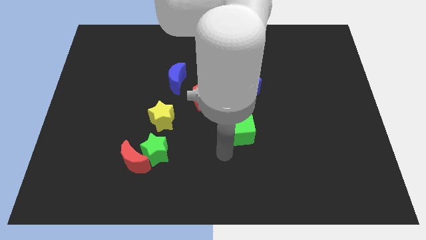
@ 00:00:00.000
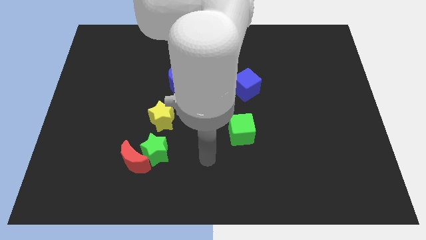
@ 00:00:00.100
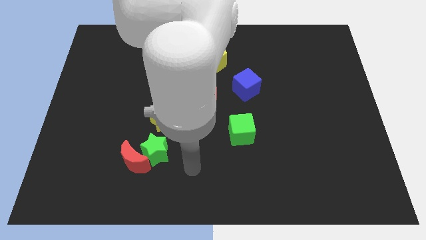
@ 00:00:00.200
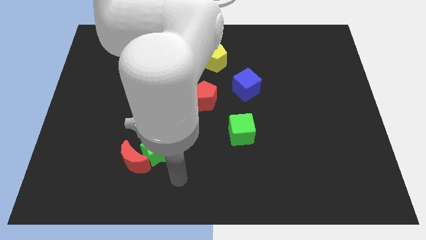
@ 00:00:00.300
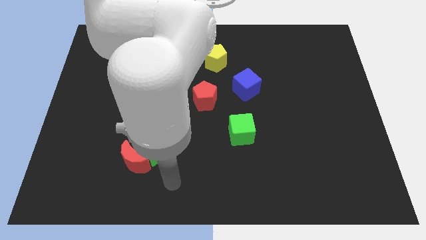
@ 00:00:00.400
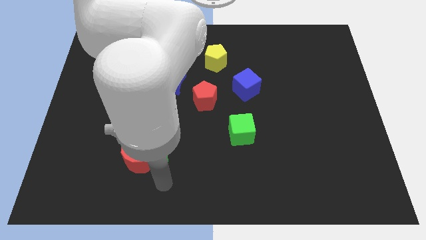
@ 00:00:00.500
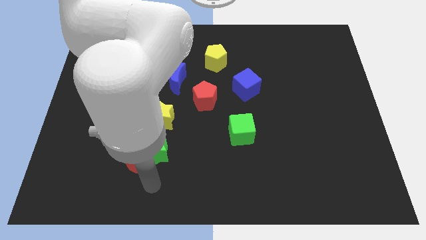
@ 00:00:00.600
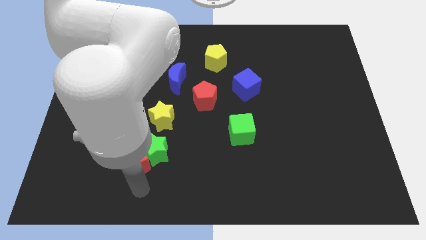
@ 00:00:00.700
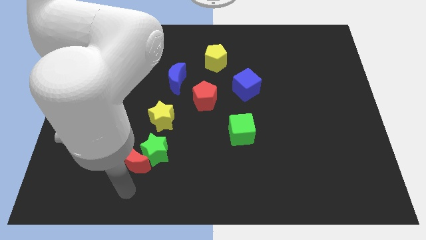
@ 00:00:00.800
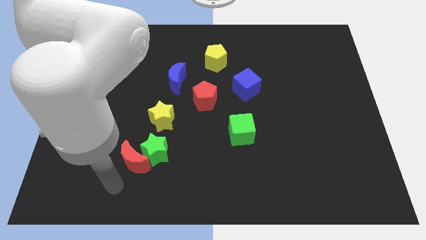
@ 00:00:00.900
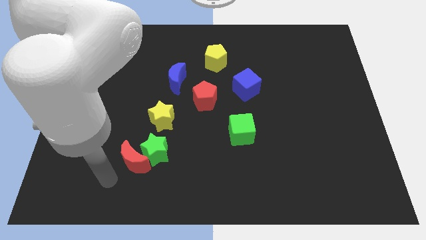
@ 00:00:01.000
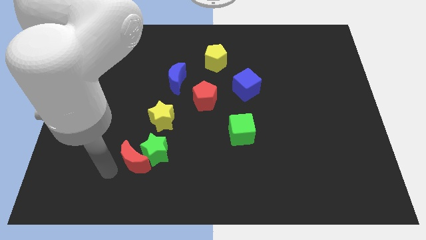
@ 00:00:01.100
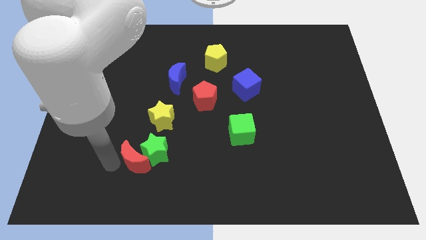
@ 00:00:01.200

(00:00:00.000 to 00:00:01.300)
move your arm towards the red crescent

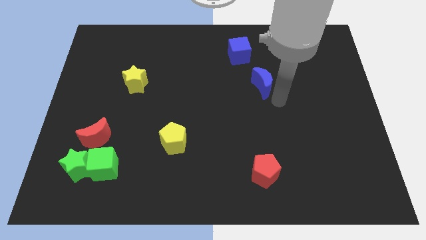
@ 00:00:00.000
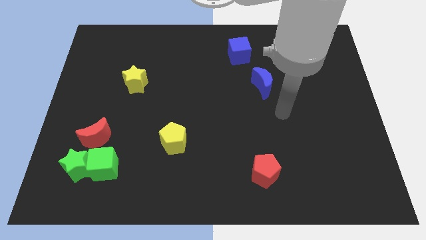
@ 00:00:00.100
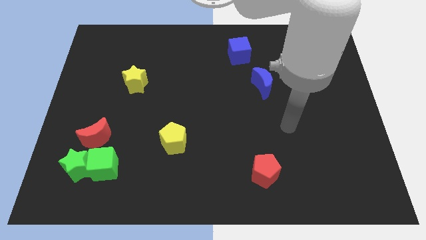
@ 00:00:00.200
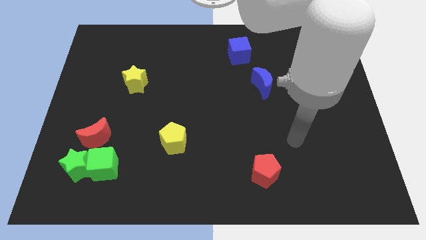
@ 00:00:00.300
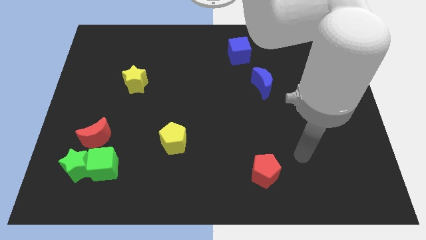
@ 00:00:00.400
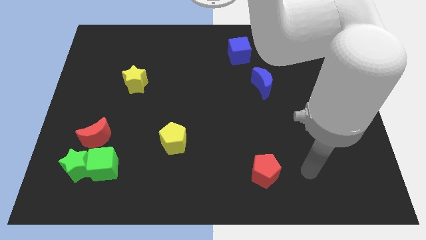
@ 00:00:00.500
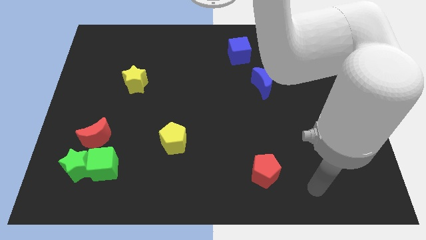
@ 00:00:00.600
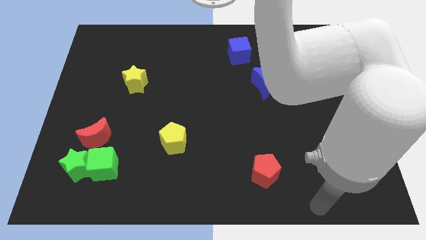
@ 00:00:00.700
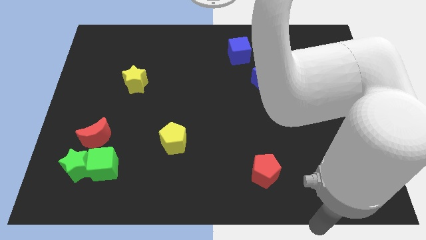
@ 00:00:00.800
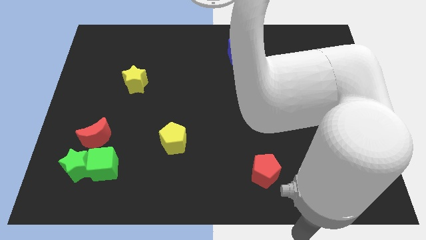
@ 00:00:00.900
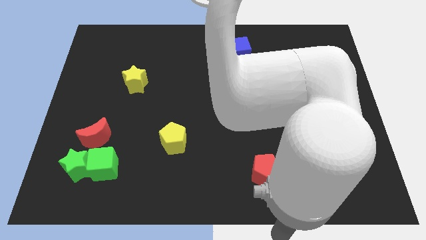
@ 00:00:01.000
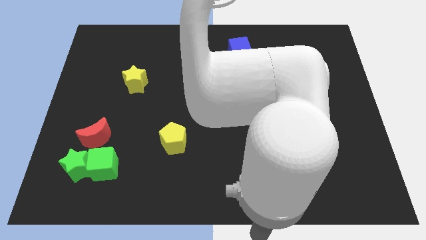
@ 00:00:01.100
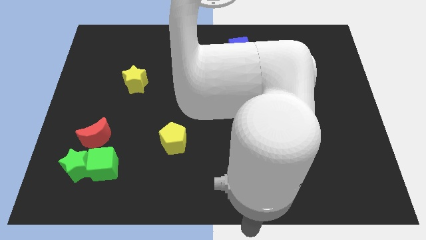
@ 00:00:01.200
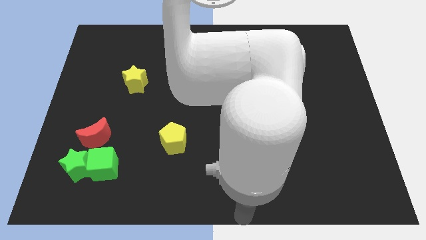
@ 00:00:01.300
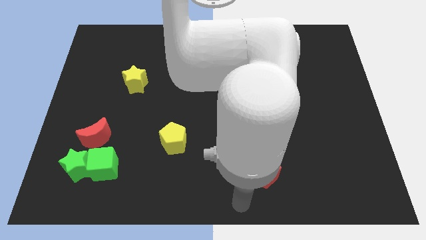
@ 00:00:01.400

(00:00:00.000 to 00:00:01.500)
point the arm at the bottom center of the board

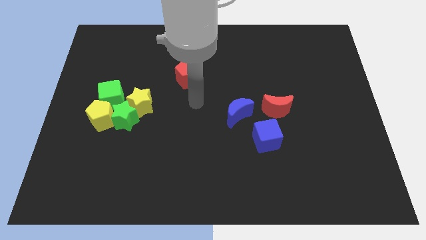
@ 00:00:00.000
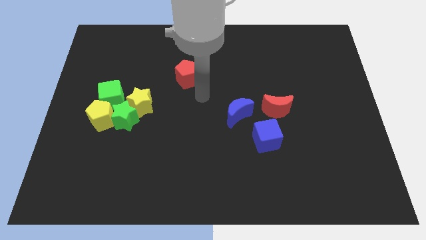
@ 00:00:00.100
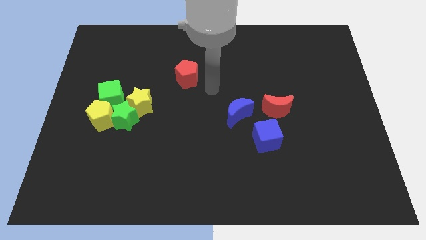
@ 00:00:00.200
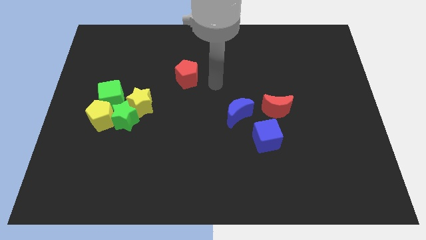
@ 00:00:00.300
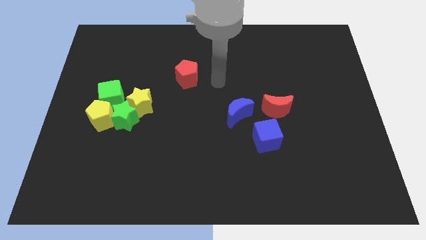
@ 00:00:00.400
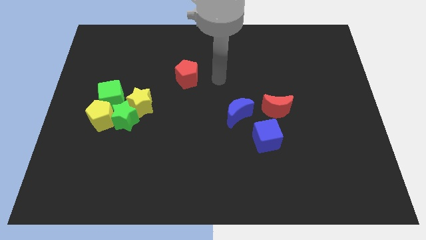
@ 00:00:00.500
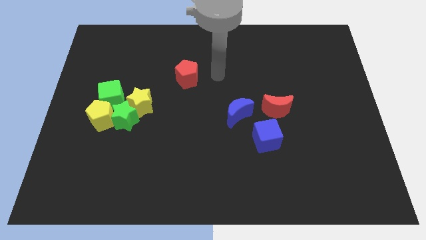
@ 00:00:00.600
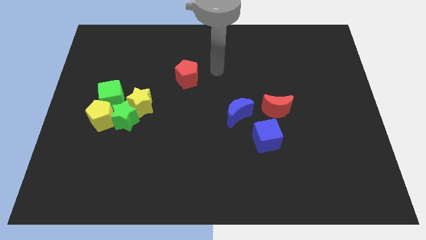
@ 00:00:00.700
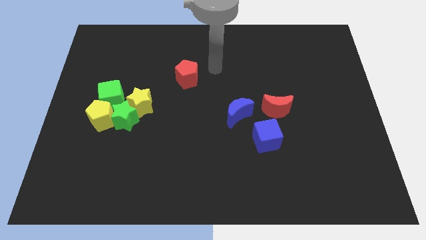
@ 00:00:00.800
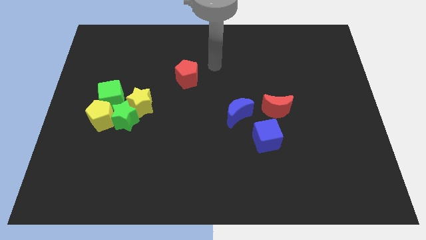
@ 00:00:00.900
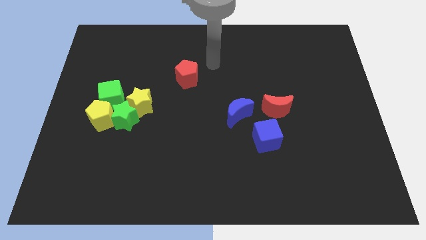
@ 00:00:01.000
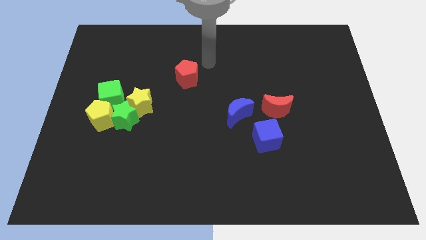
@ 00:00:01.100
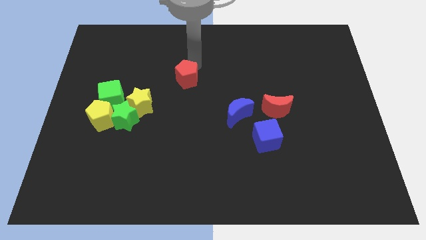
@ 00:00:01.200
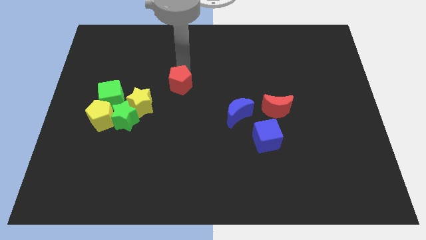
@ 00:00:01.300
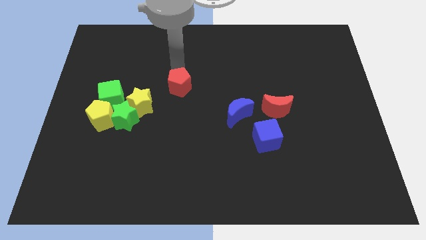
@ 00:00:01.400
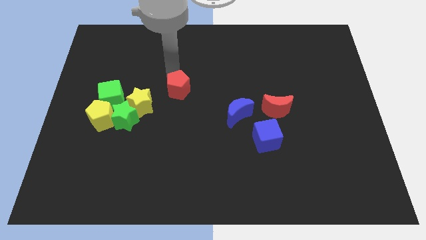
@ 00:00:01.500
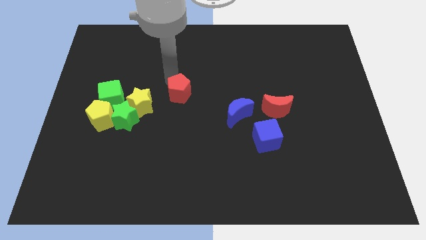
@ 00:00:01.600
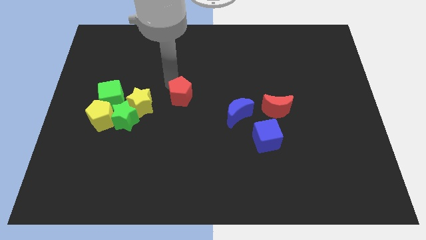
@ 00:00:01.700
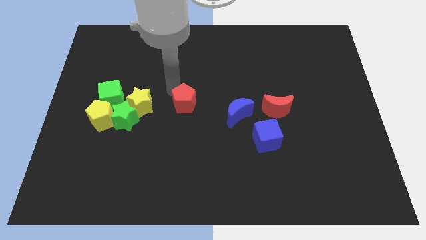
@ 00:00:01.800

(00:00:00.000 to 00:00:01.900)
push the red pentagon towards the center of the board

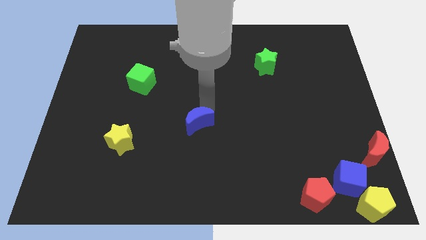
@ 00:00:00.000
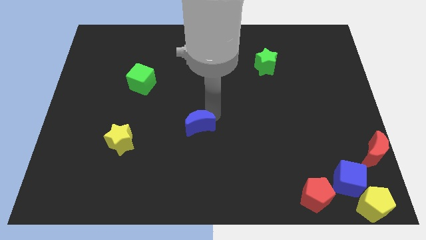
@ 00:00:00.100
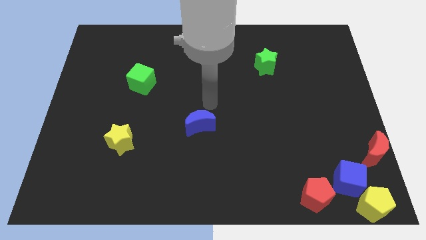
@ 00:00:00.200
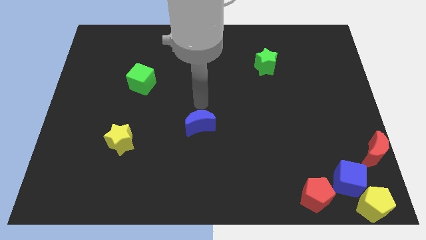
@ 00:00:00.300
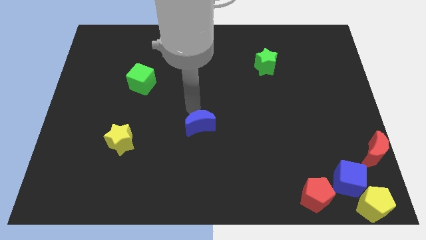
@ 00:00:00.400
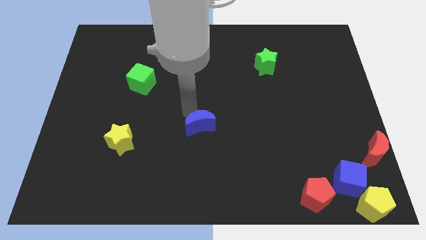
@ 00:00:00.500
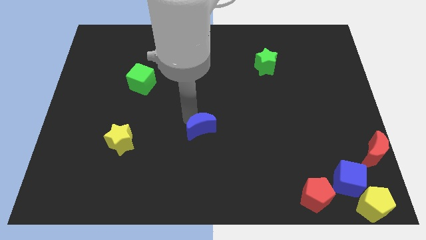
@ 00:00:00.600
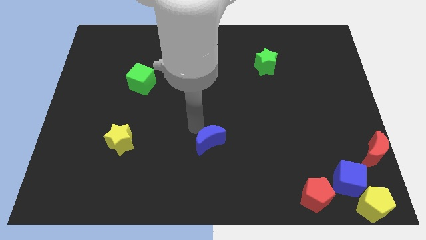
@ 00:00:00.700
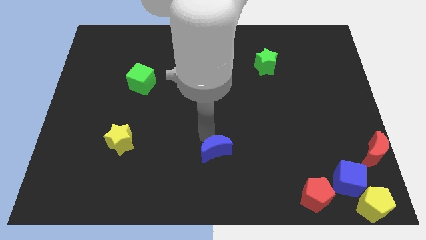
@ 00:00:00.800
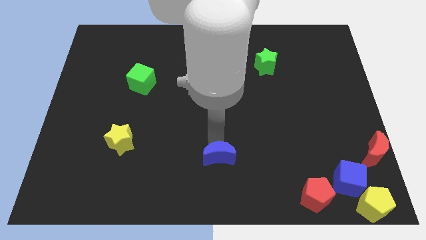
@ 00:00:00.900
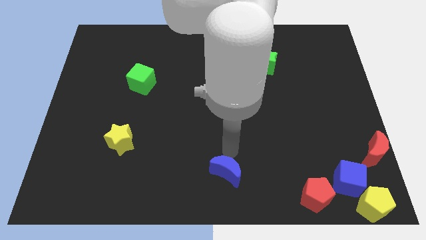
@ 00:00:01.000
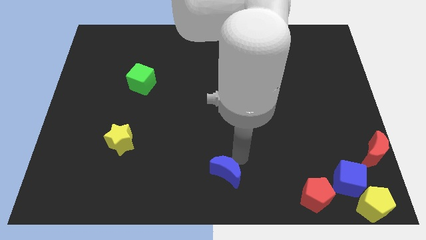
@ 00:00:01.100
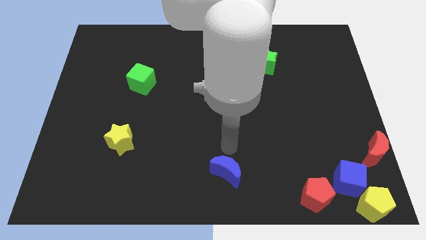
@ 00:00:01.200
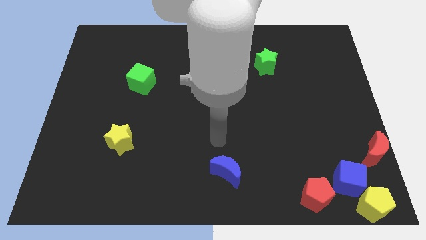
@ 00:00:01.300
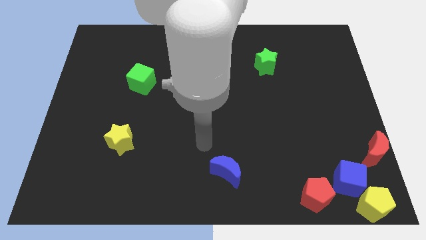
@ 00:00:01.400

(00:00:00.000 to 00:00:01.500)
move the blue crescent to the bottom center

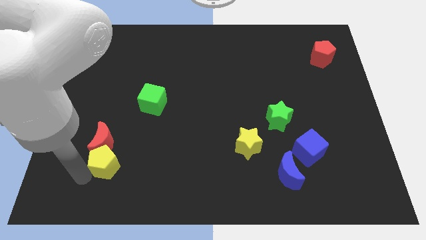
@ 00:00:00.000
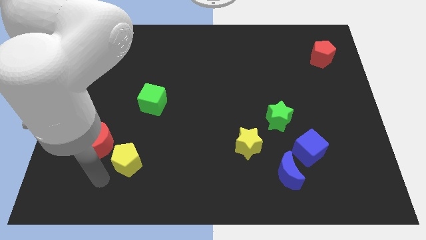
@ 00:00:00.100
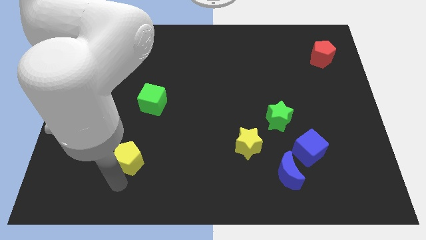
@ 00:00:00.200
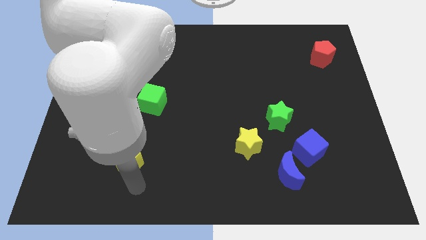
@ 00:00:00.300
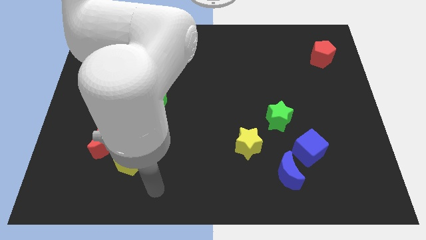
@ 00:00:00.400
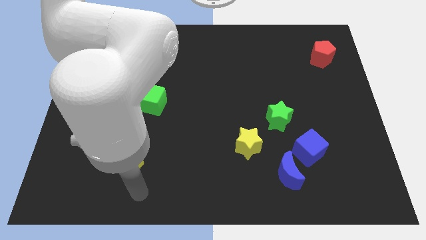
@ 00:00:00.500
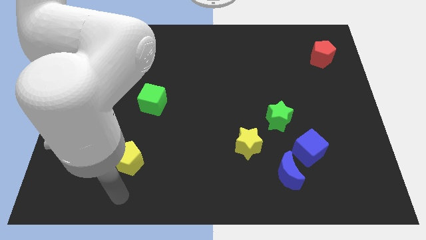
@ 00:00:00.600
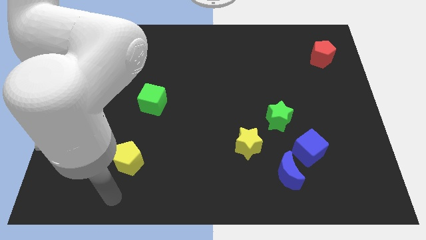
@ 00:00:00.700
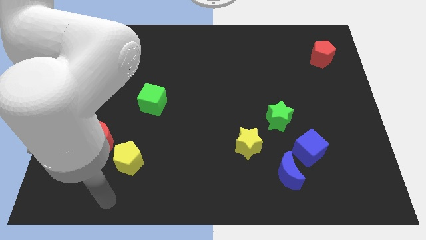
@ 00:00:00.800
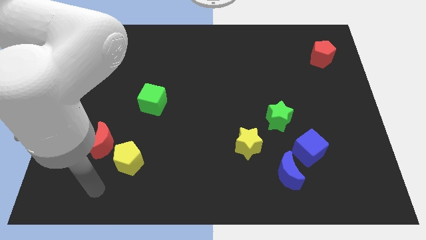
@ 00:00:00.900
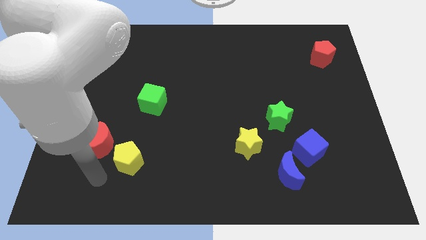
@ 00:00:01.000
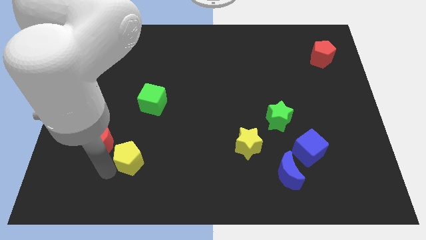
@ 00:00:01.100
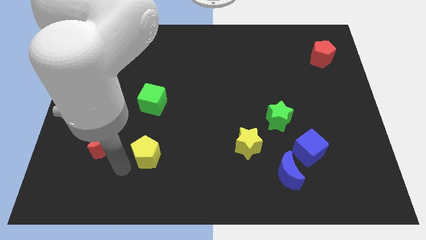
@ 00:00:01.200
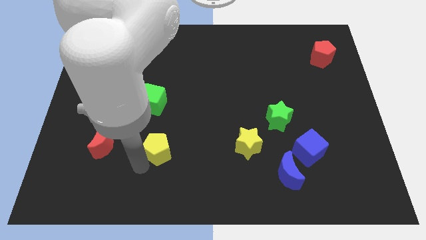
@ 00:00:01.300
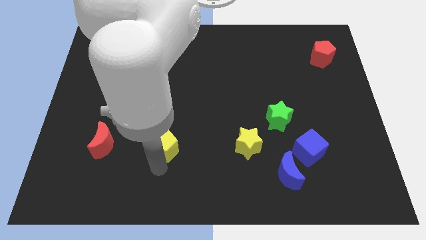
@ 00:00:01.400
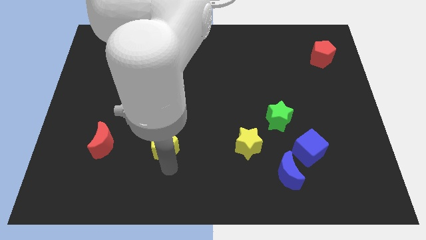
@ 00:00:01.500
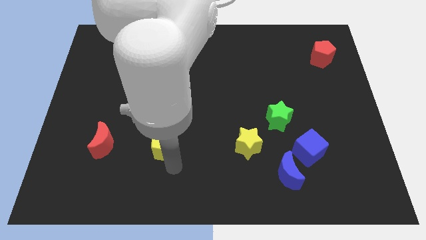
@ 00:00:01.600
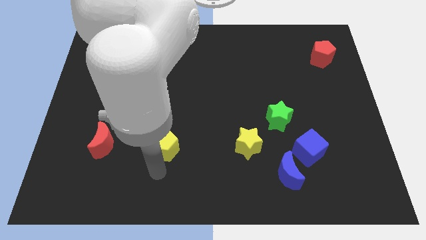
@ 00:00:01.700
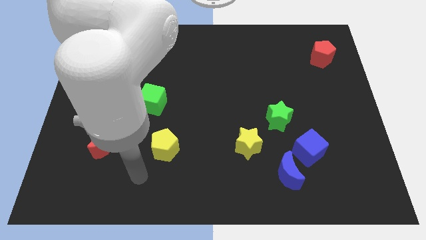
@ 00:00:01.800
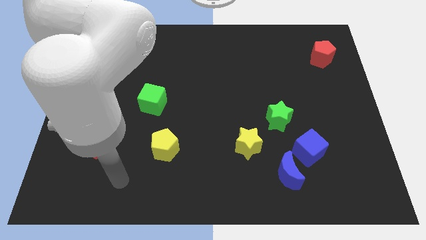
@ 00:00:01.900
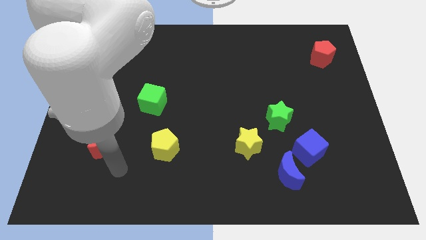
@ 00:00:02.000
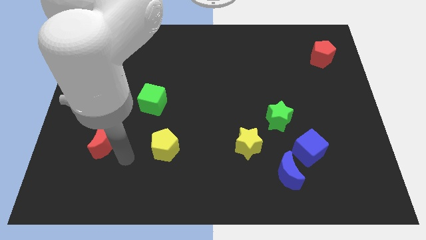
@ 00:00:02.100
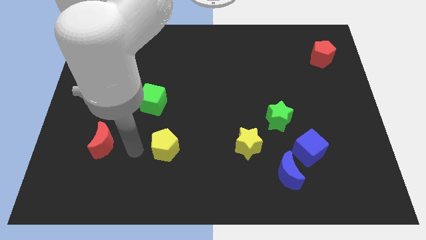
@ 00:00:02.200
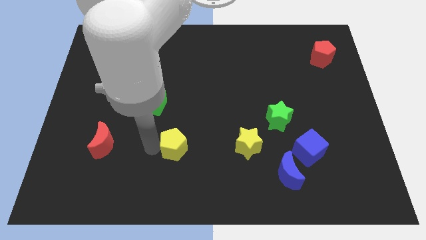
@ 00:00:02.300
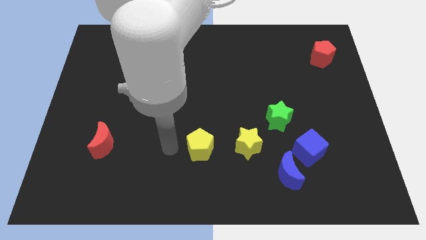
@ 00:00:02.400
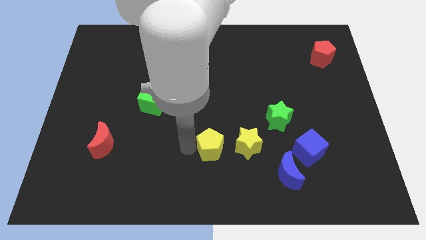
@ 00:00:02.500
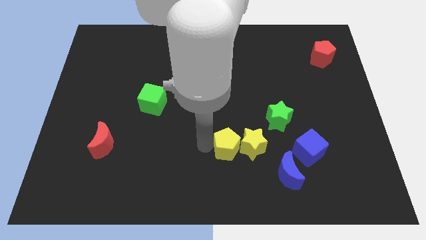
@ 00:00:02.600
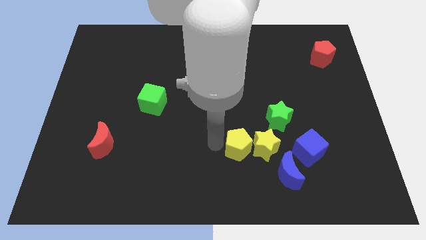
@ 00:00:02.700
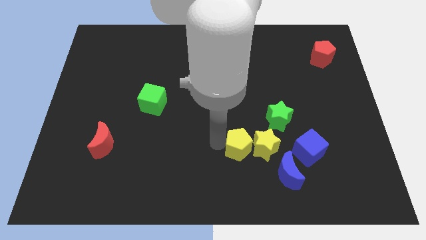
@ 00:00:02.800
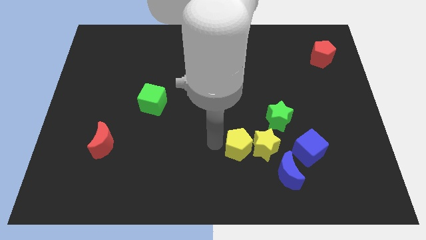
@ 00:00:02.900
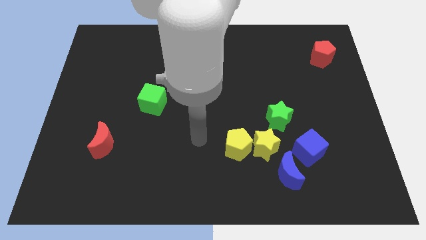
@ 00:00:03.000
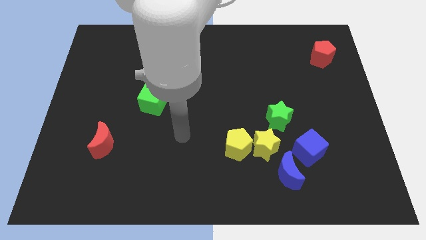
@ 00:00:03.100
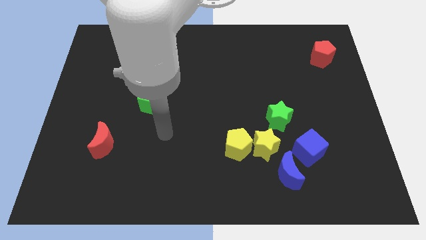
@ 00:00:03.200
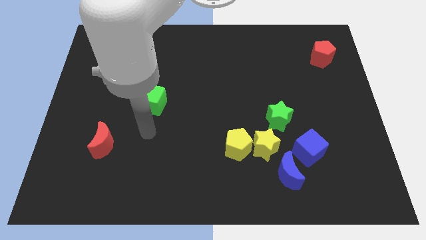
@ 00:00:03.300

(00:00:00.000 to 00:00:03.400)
push the yellow pentagon towards the yellow star
